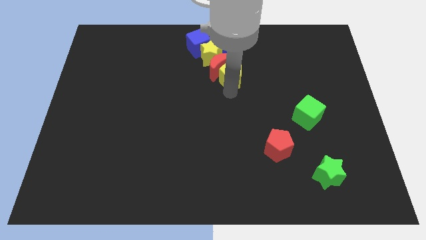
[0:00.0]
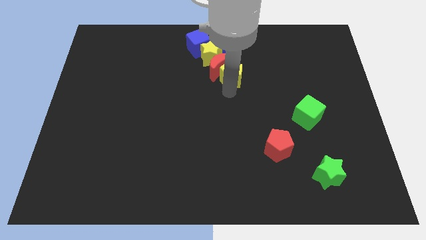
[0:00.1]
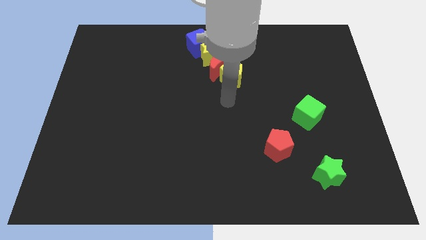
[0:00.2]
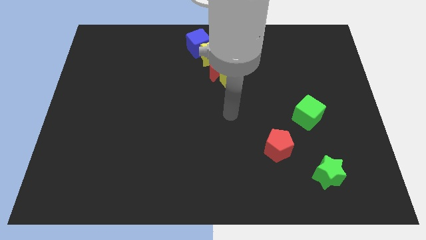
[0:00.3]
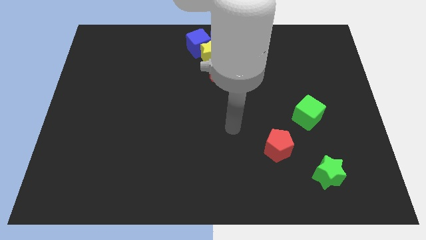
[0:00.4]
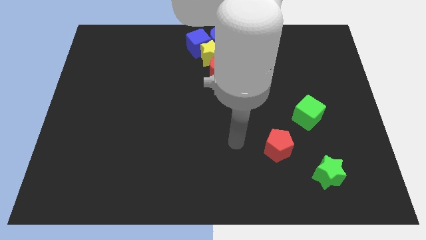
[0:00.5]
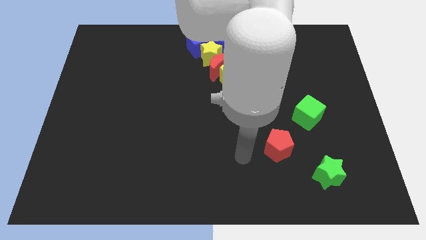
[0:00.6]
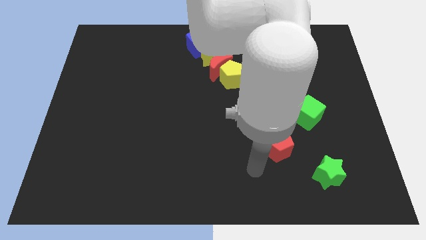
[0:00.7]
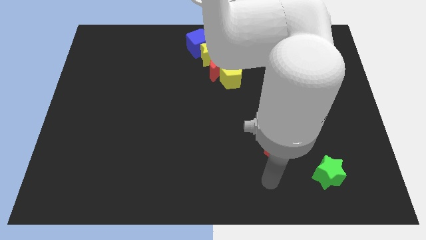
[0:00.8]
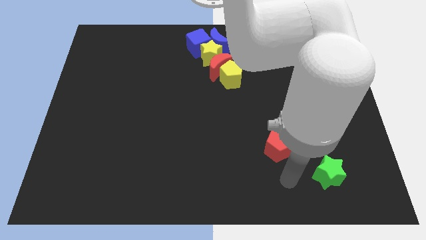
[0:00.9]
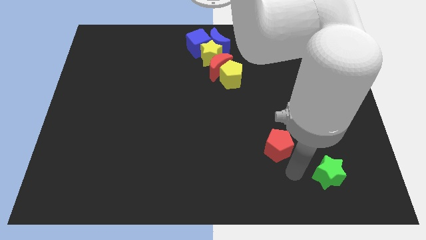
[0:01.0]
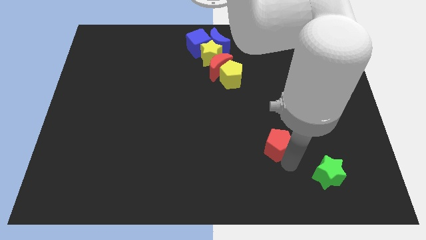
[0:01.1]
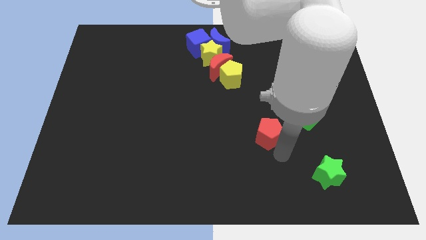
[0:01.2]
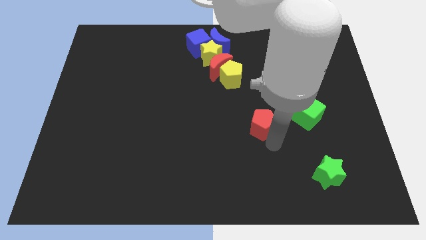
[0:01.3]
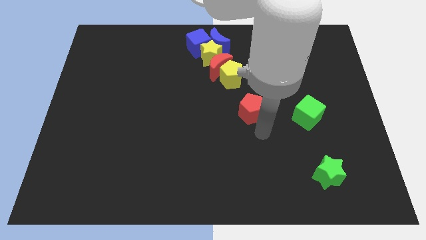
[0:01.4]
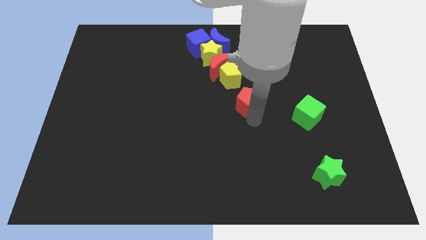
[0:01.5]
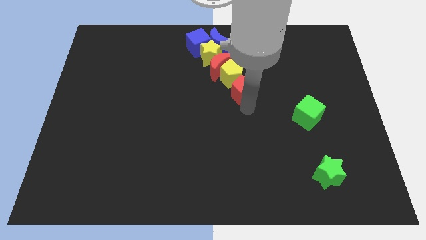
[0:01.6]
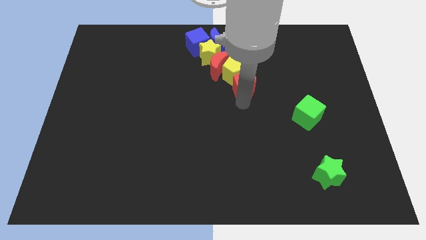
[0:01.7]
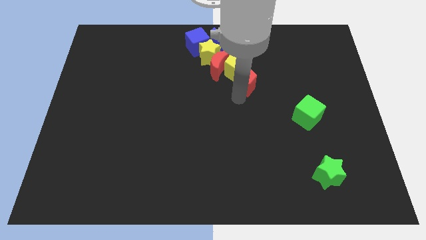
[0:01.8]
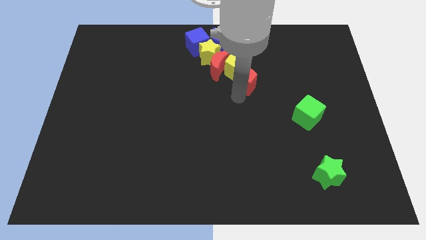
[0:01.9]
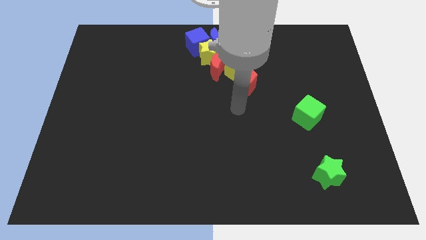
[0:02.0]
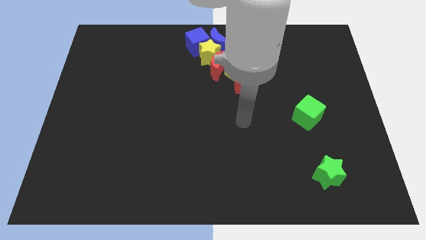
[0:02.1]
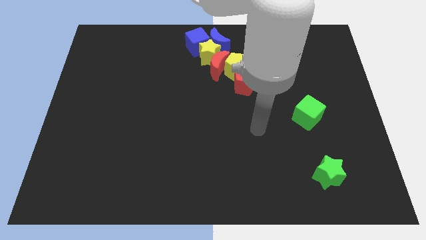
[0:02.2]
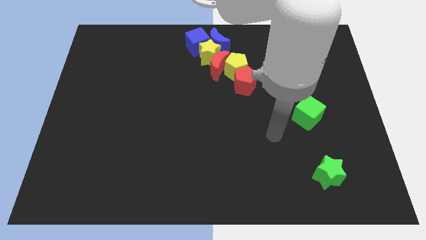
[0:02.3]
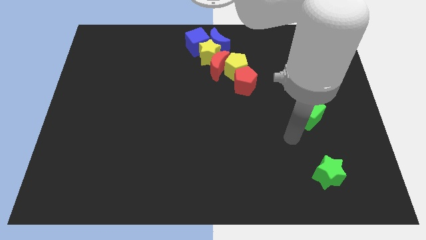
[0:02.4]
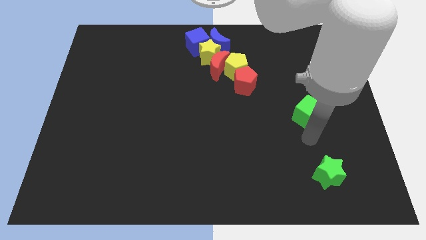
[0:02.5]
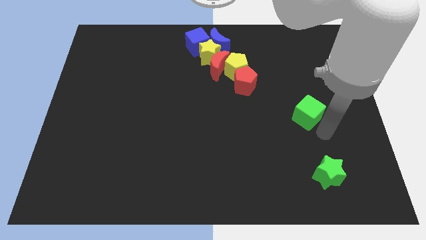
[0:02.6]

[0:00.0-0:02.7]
push the red pentagon into the yellow pentagon

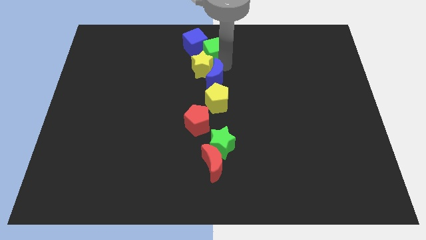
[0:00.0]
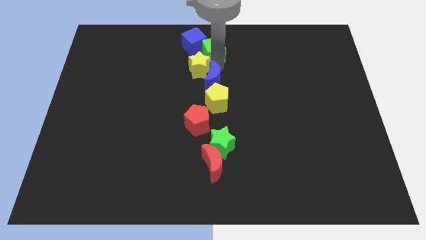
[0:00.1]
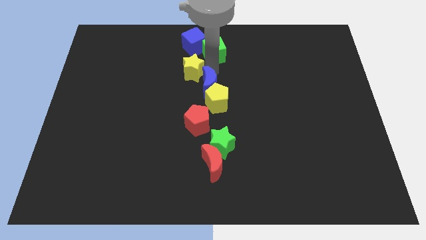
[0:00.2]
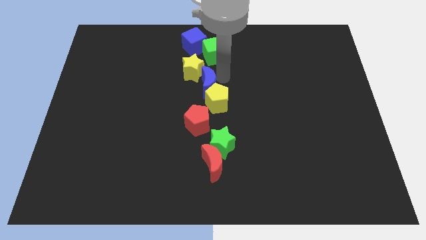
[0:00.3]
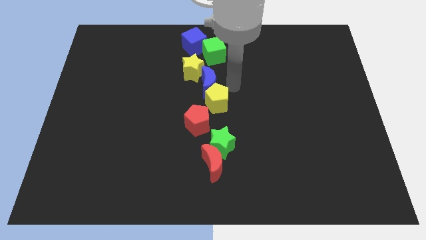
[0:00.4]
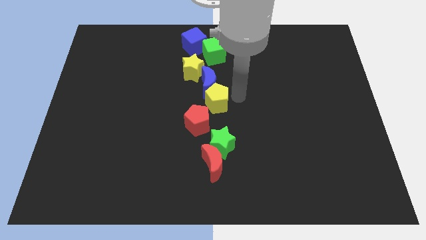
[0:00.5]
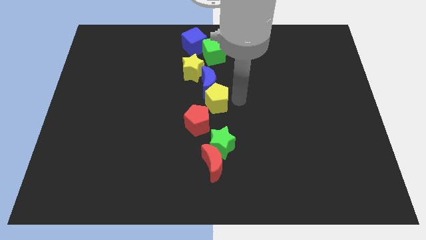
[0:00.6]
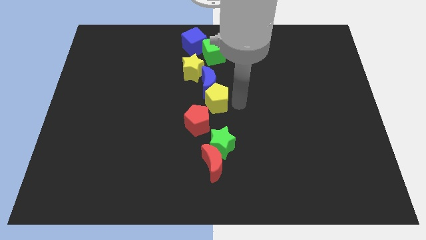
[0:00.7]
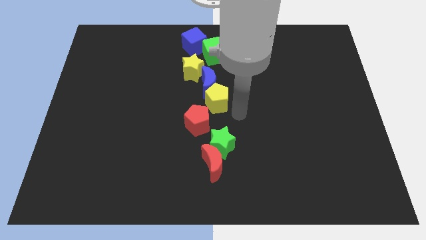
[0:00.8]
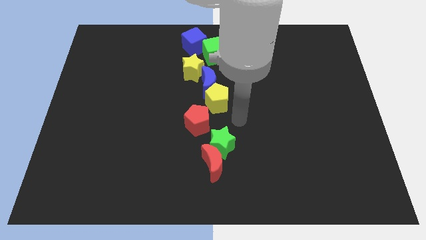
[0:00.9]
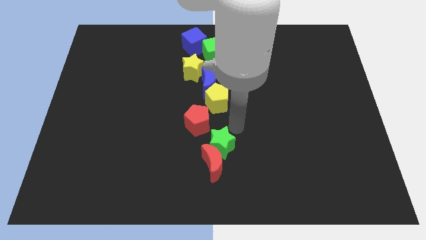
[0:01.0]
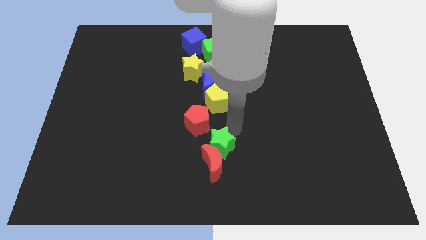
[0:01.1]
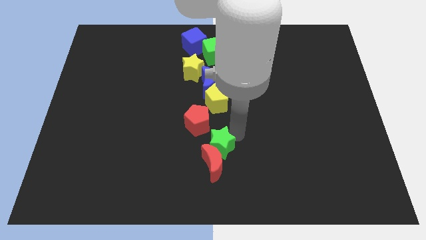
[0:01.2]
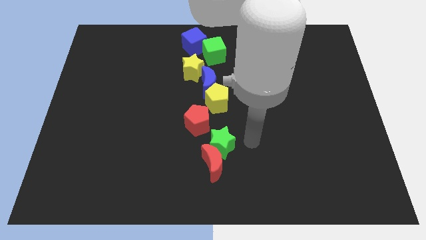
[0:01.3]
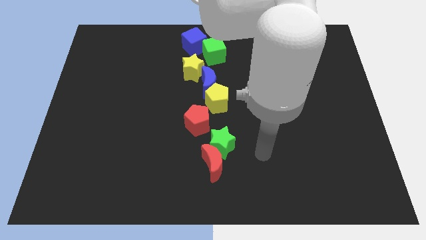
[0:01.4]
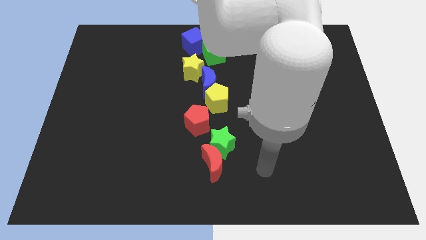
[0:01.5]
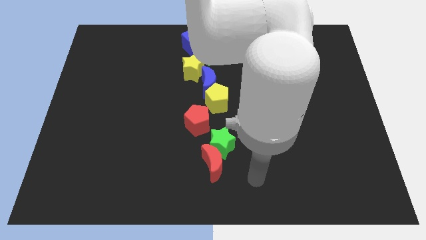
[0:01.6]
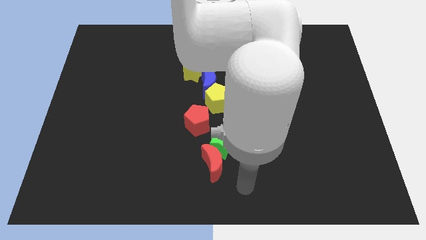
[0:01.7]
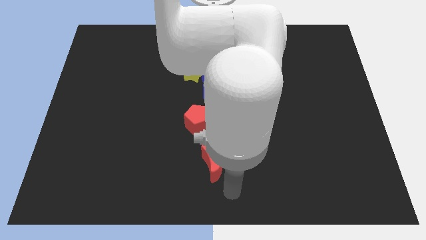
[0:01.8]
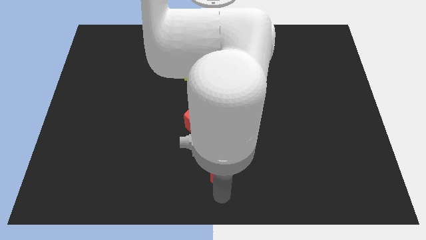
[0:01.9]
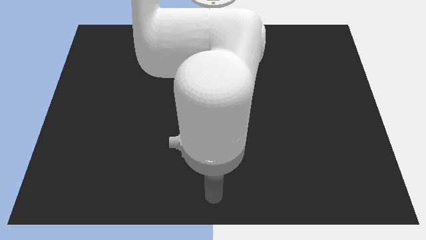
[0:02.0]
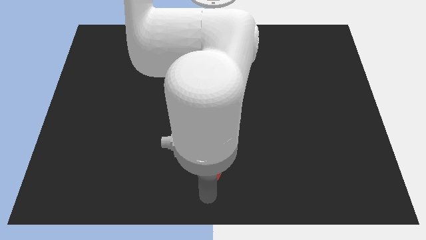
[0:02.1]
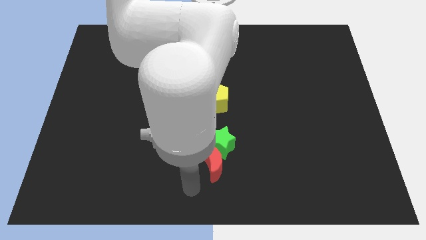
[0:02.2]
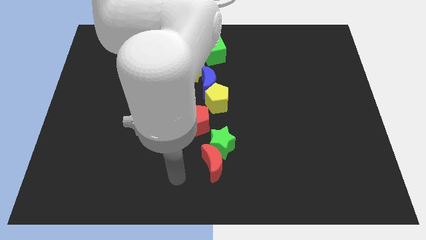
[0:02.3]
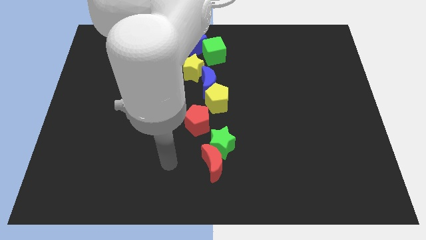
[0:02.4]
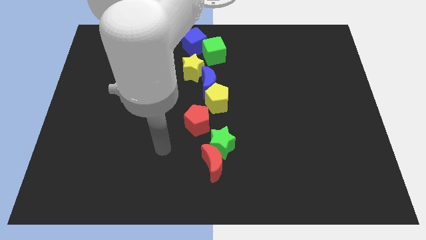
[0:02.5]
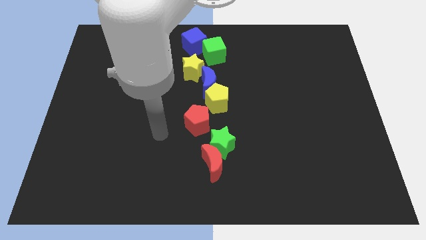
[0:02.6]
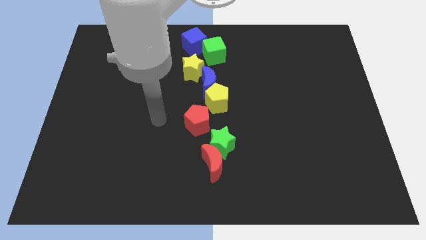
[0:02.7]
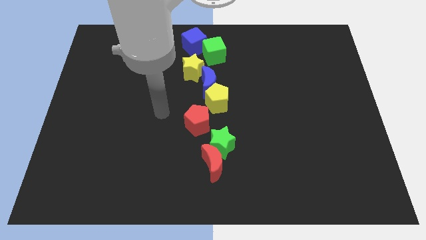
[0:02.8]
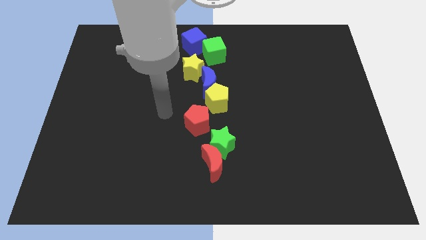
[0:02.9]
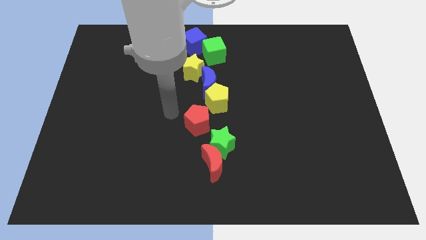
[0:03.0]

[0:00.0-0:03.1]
move the blue moon and green cube towards the left slightly

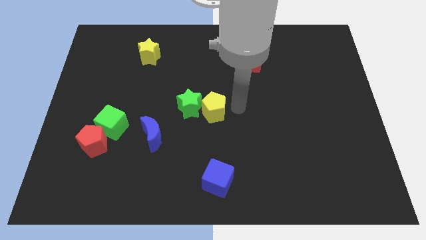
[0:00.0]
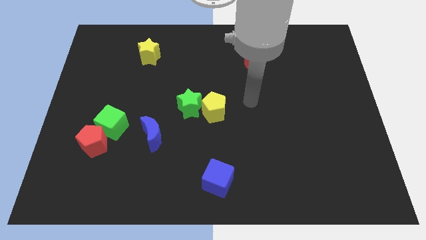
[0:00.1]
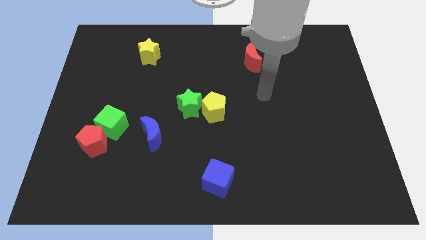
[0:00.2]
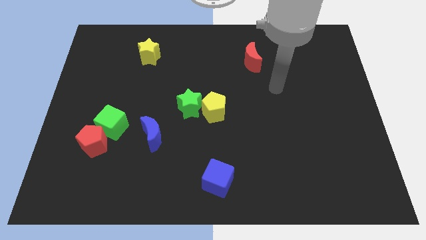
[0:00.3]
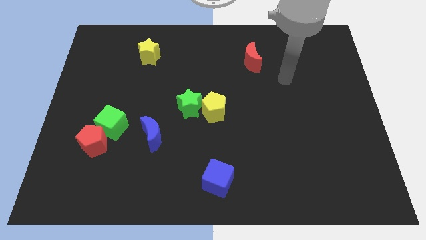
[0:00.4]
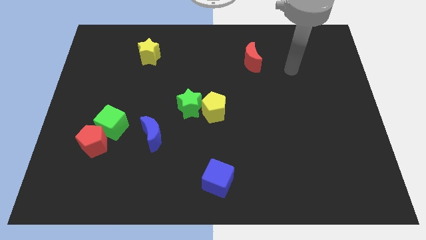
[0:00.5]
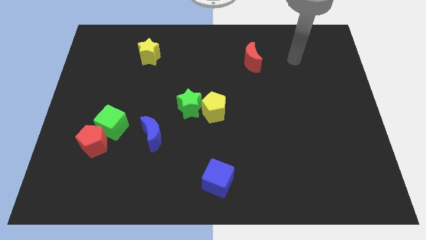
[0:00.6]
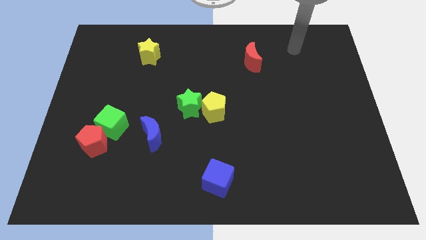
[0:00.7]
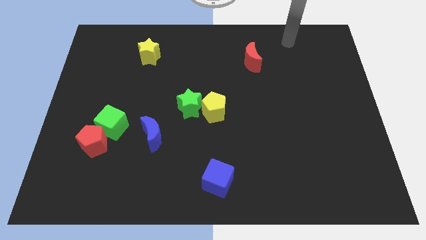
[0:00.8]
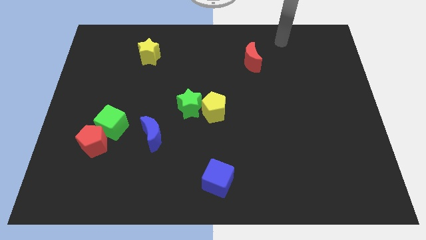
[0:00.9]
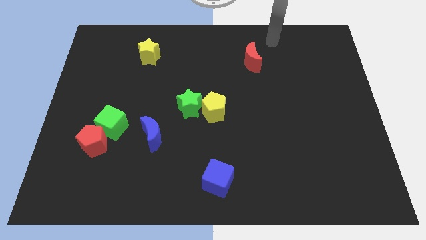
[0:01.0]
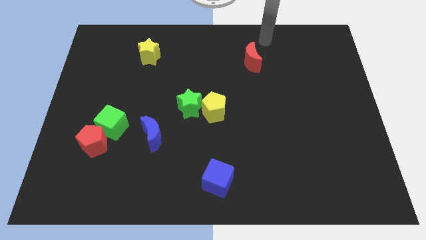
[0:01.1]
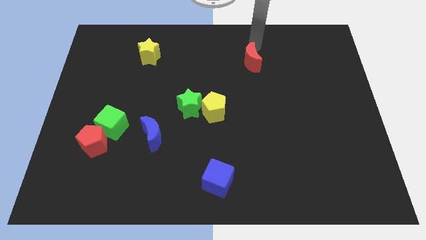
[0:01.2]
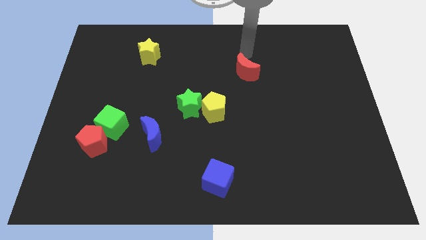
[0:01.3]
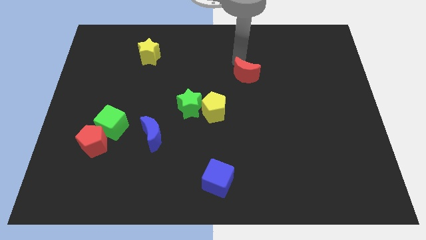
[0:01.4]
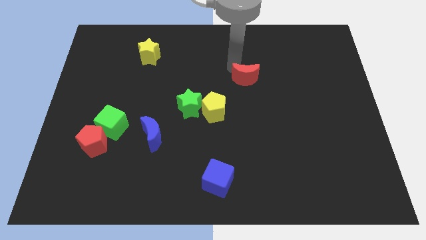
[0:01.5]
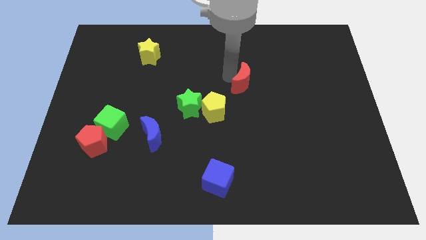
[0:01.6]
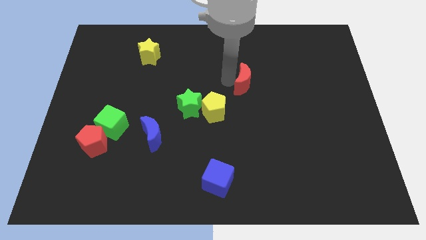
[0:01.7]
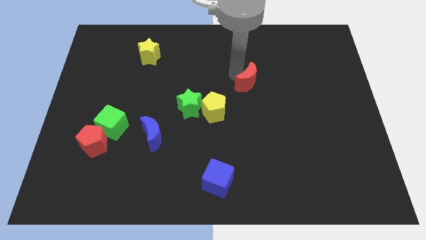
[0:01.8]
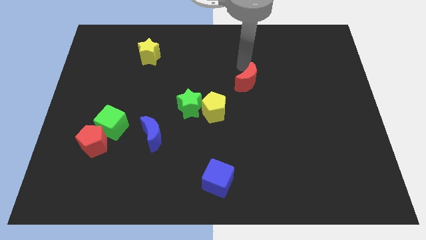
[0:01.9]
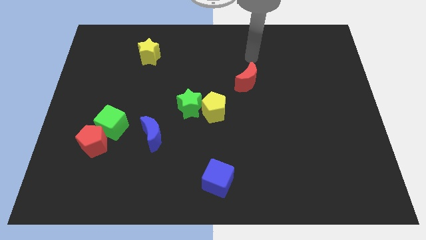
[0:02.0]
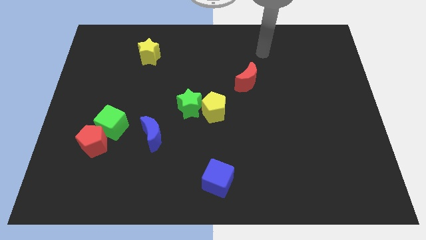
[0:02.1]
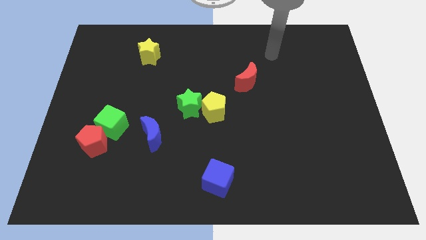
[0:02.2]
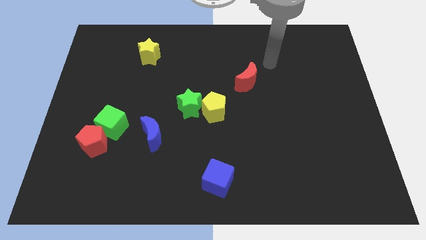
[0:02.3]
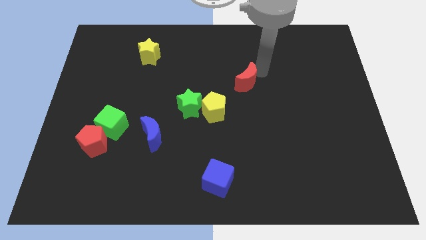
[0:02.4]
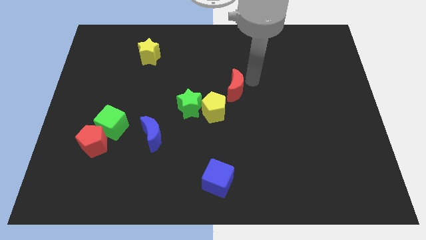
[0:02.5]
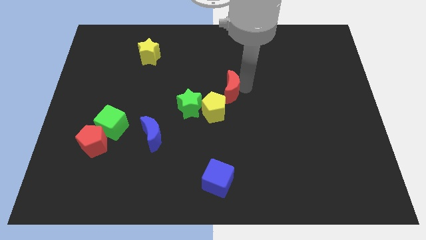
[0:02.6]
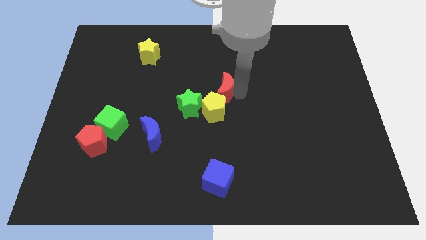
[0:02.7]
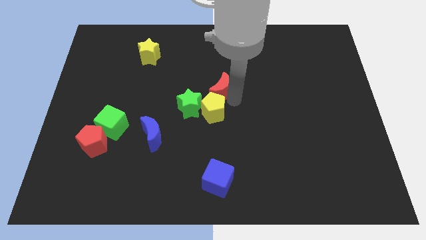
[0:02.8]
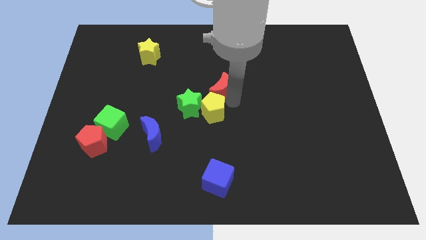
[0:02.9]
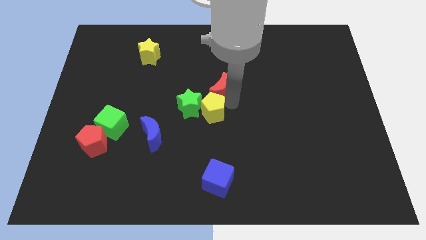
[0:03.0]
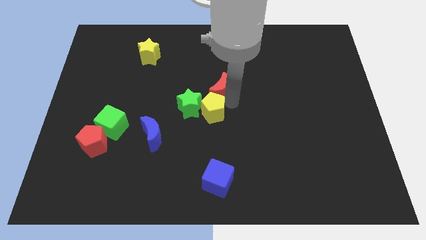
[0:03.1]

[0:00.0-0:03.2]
move the red crescent to the top side of the yellow pentagon
